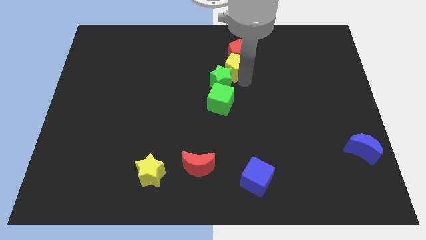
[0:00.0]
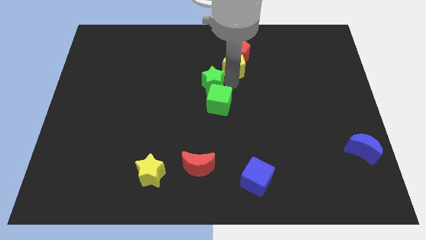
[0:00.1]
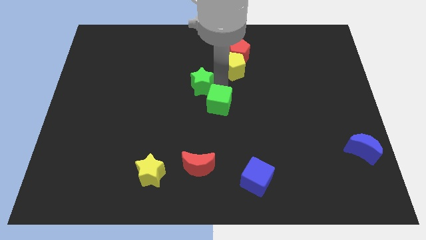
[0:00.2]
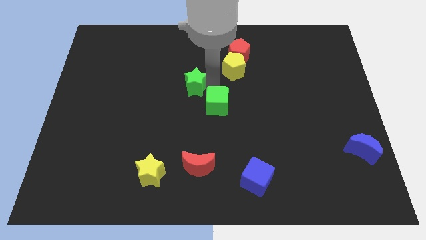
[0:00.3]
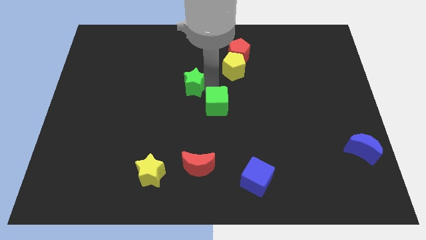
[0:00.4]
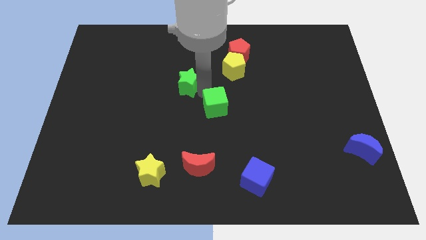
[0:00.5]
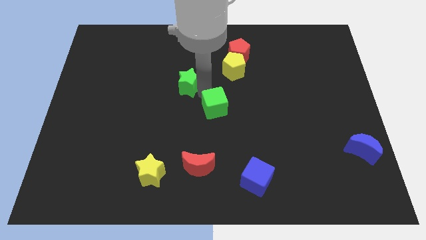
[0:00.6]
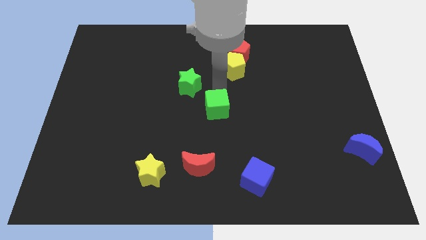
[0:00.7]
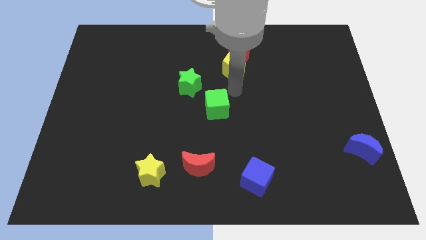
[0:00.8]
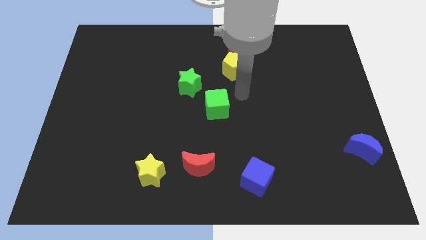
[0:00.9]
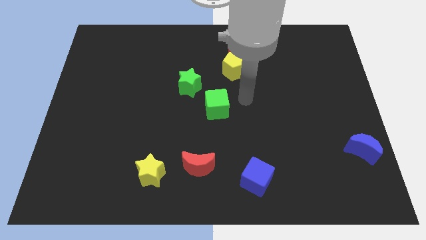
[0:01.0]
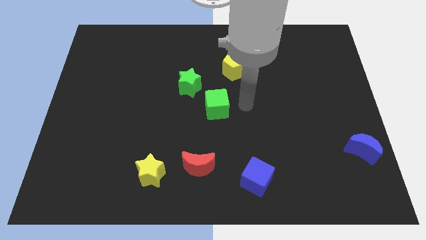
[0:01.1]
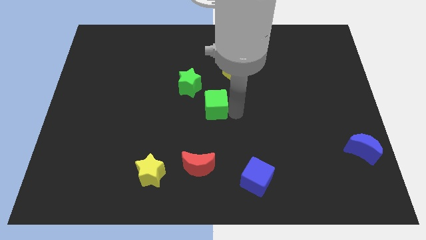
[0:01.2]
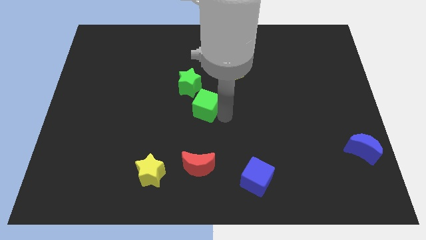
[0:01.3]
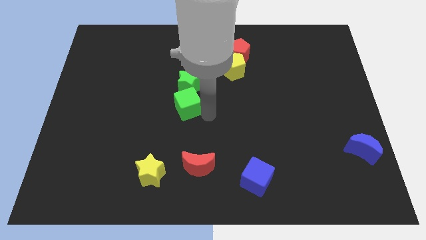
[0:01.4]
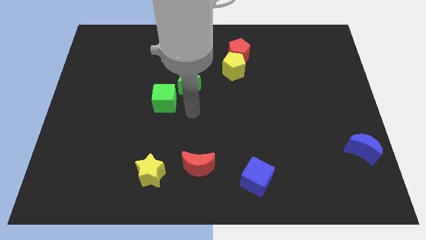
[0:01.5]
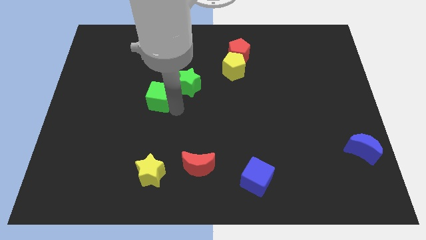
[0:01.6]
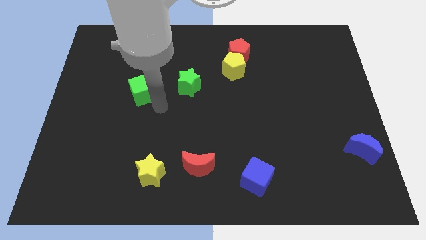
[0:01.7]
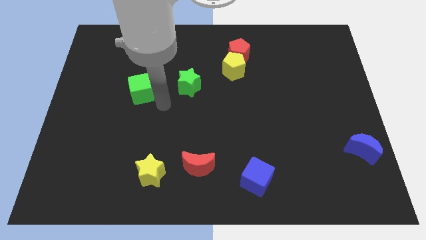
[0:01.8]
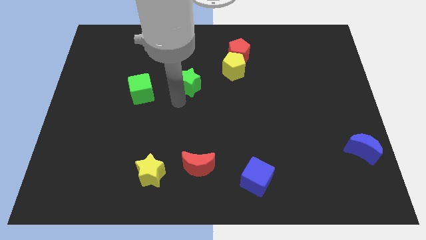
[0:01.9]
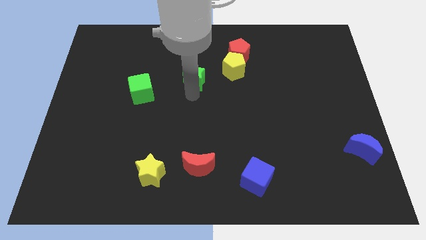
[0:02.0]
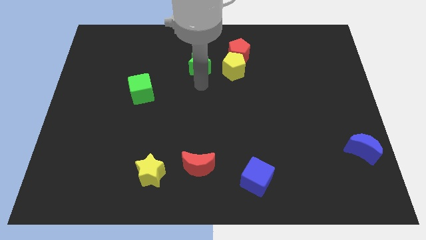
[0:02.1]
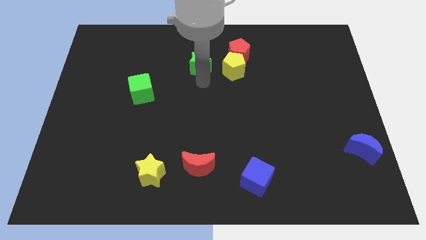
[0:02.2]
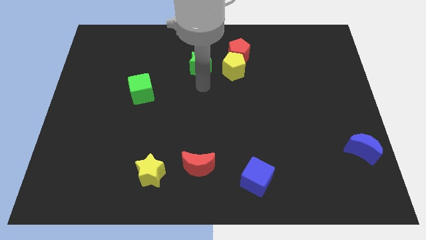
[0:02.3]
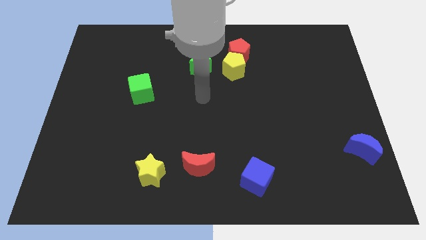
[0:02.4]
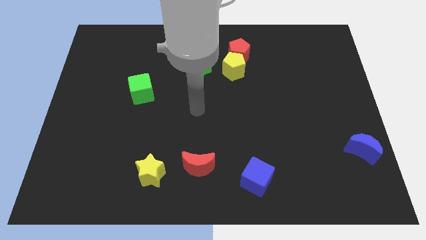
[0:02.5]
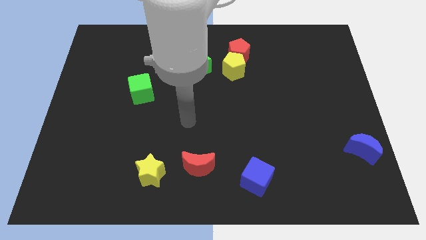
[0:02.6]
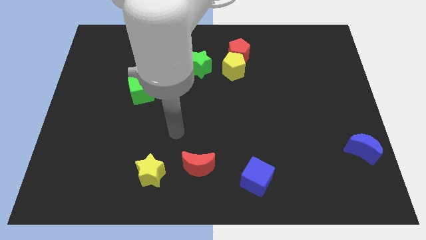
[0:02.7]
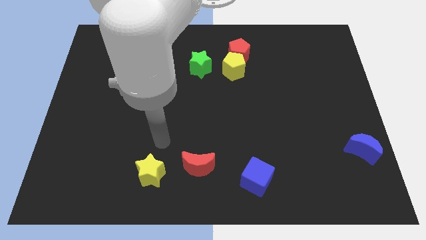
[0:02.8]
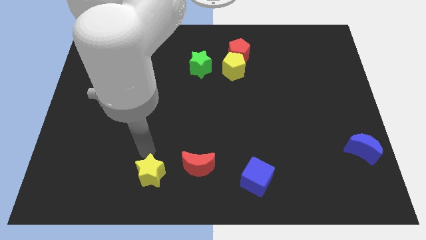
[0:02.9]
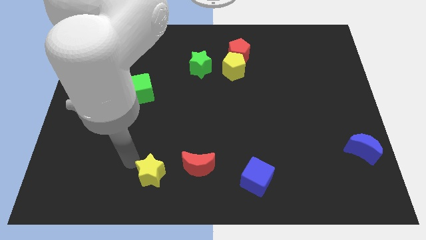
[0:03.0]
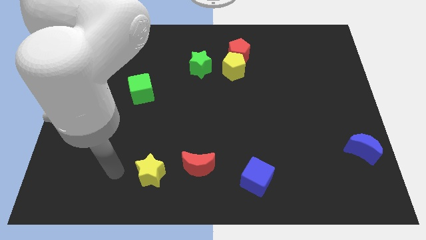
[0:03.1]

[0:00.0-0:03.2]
separate green blocks from red and yellow pentagon

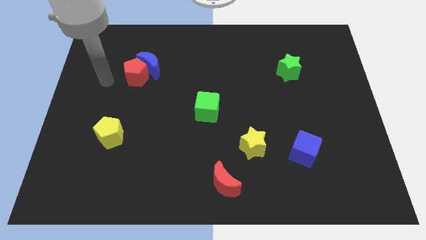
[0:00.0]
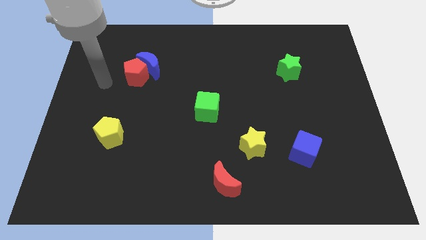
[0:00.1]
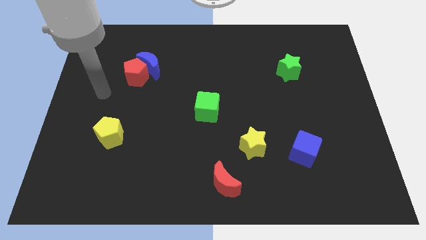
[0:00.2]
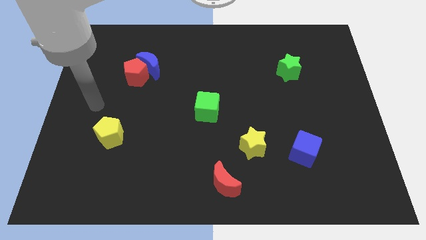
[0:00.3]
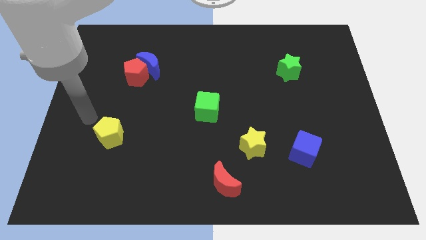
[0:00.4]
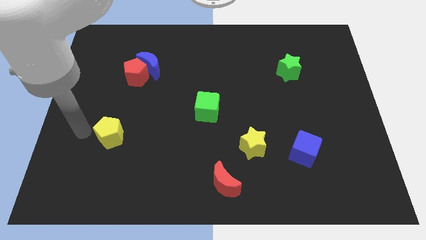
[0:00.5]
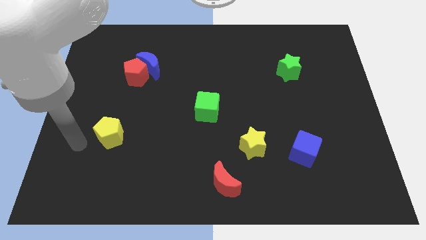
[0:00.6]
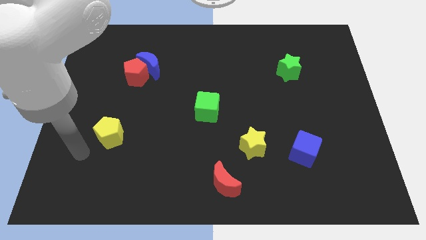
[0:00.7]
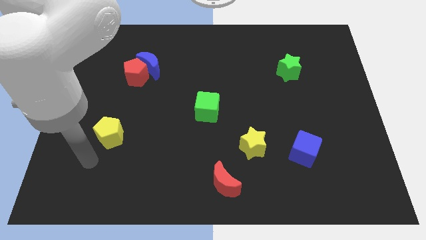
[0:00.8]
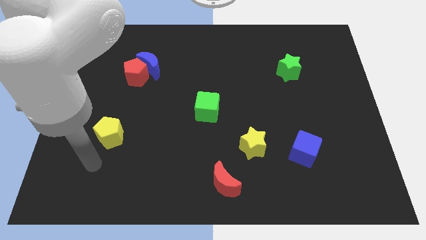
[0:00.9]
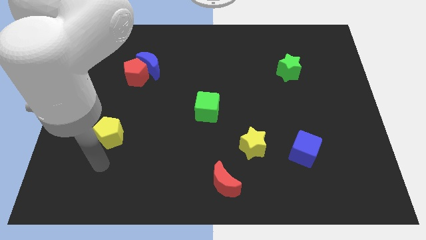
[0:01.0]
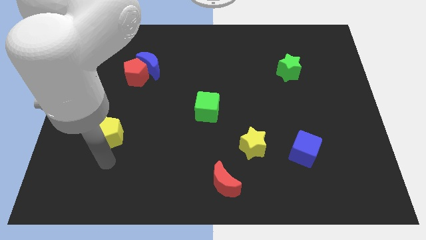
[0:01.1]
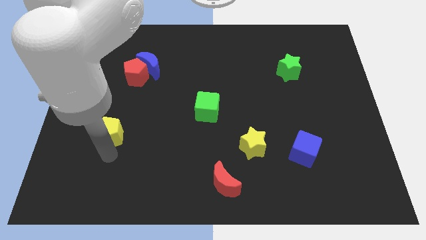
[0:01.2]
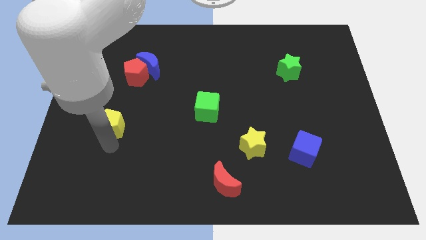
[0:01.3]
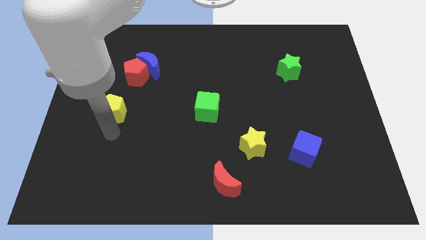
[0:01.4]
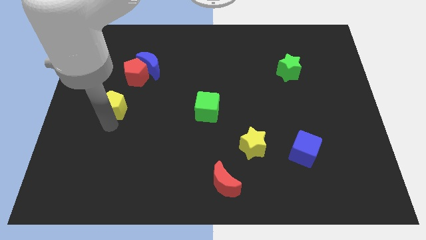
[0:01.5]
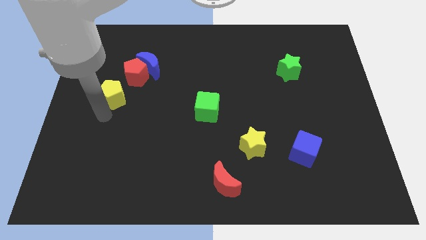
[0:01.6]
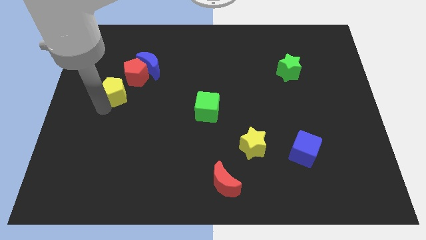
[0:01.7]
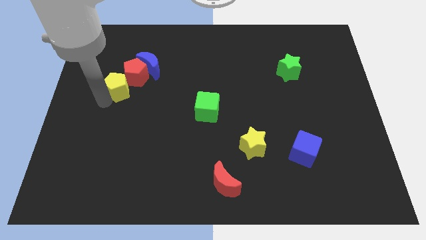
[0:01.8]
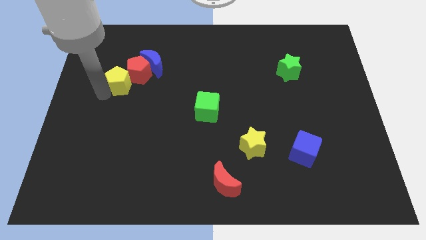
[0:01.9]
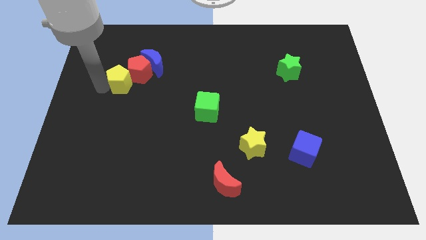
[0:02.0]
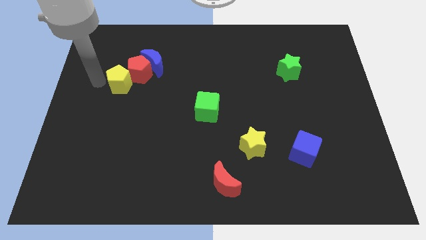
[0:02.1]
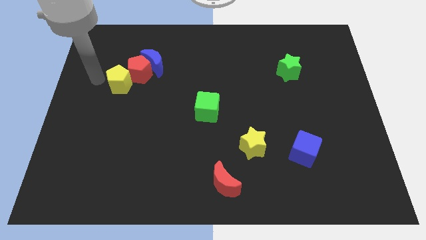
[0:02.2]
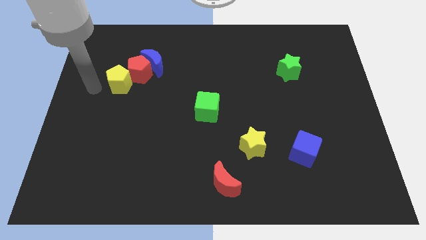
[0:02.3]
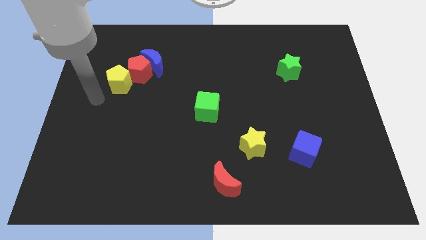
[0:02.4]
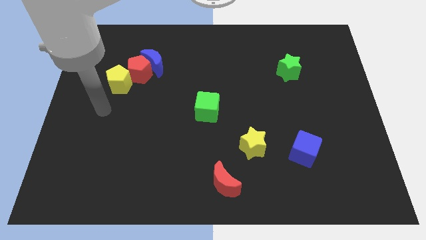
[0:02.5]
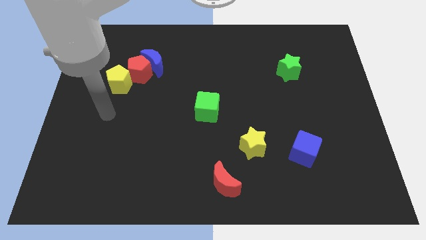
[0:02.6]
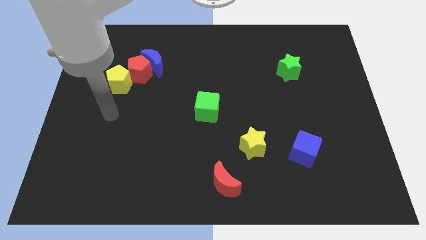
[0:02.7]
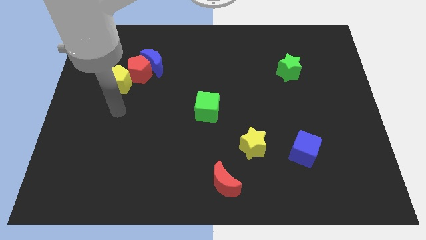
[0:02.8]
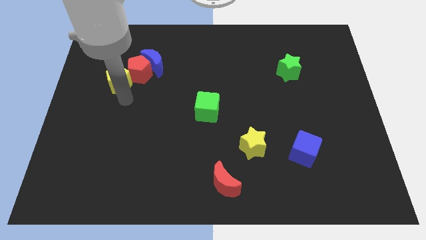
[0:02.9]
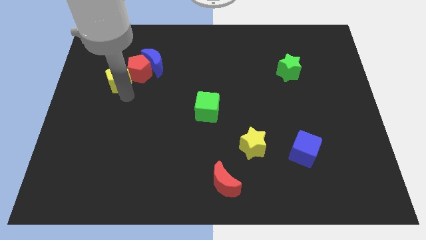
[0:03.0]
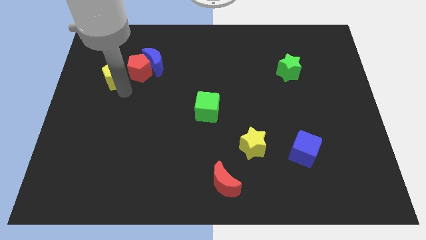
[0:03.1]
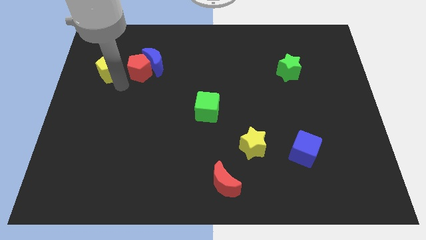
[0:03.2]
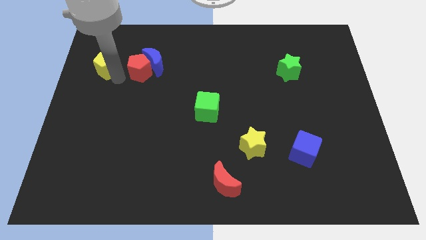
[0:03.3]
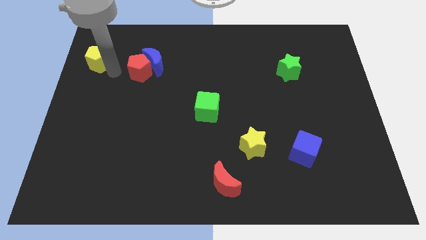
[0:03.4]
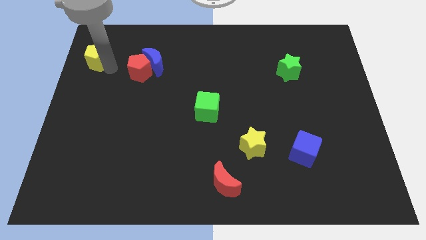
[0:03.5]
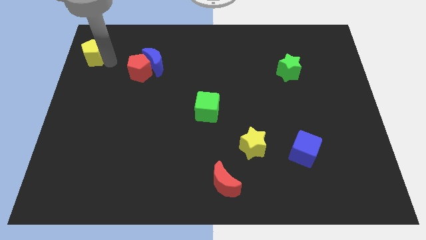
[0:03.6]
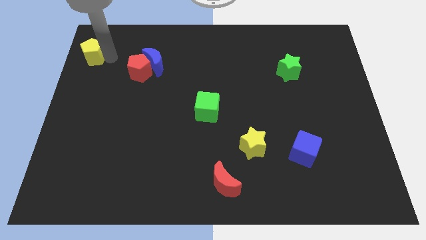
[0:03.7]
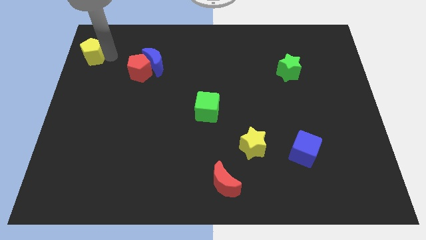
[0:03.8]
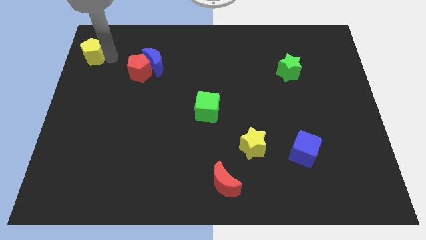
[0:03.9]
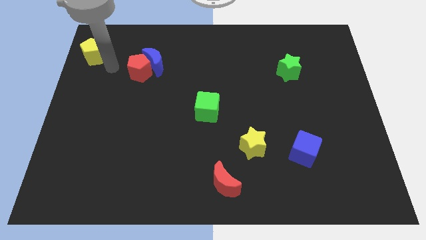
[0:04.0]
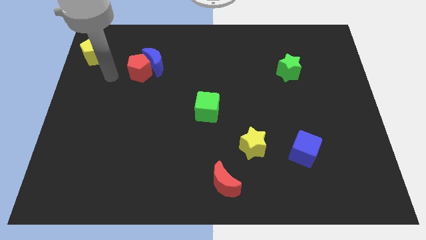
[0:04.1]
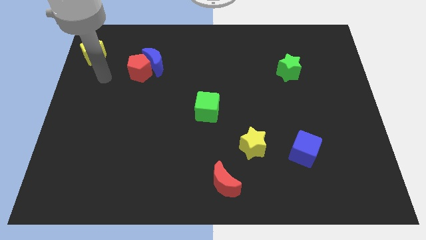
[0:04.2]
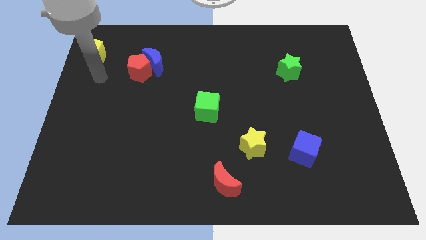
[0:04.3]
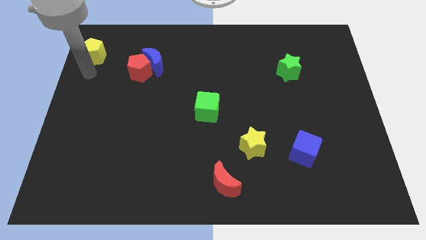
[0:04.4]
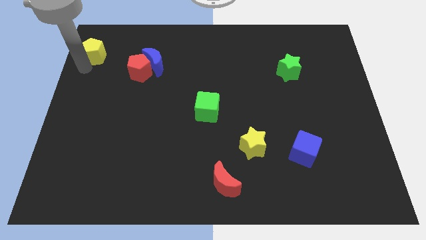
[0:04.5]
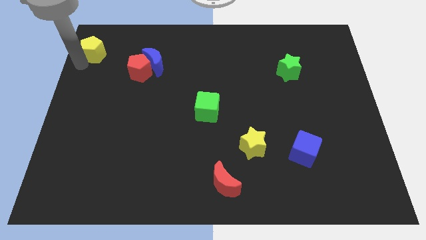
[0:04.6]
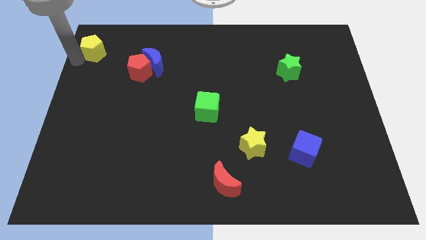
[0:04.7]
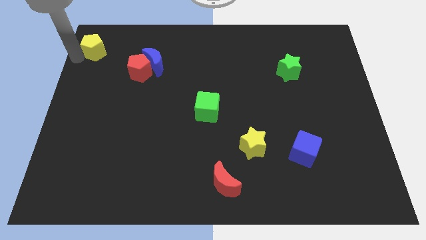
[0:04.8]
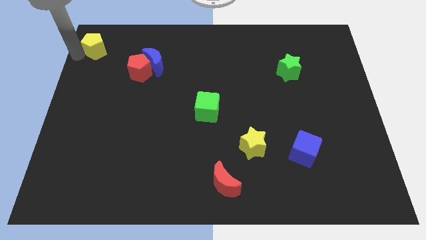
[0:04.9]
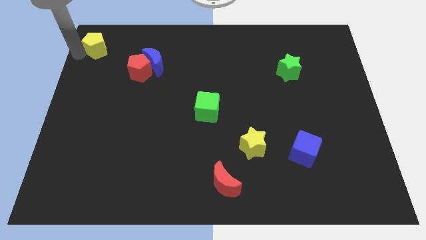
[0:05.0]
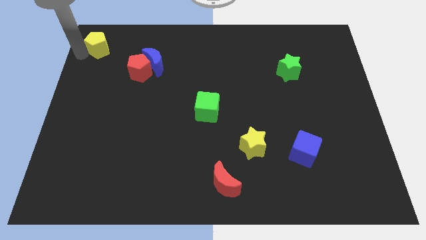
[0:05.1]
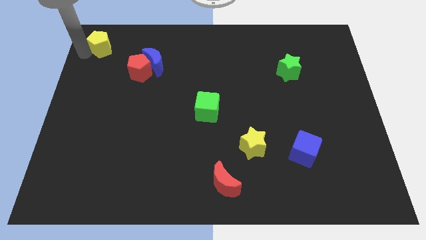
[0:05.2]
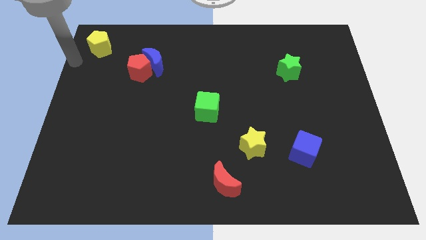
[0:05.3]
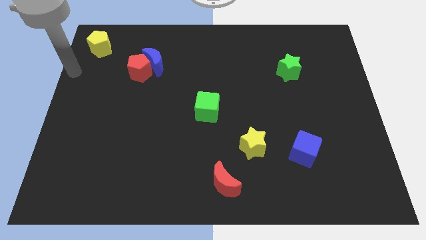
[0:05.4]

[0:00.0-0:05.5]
move yellow pentagon to the top left of the board

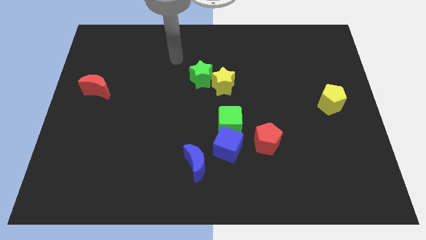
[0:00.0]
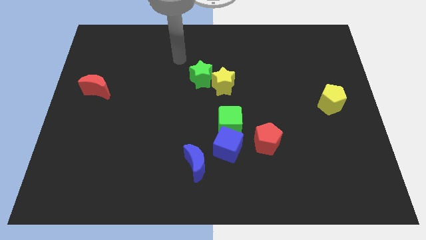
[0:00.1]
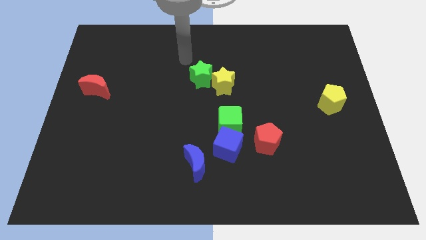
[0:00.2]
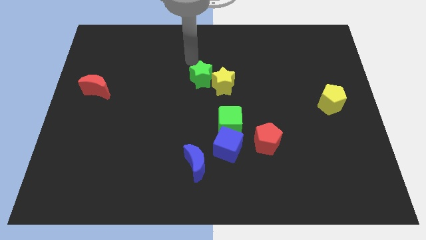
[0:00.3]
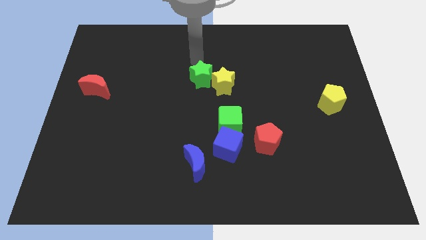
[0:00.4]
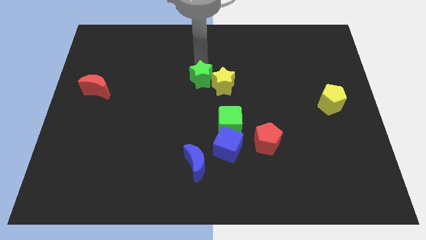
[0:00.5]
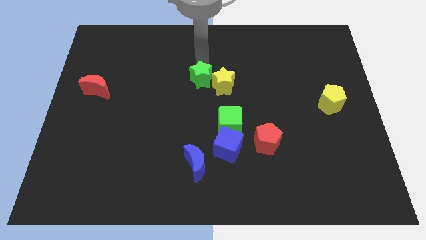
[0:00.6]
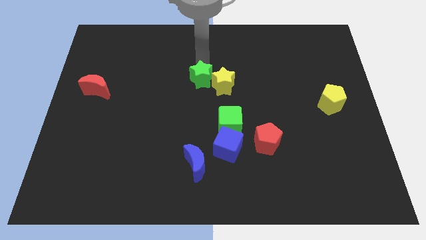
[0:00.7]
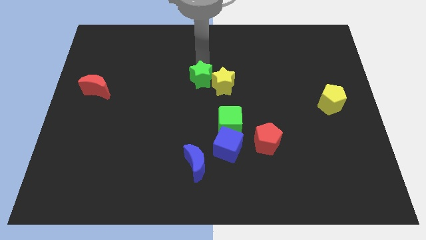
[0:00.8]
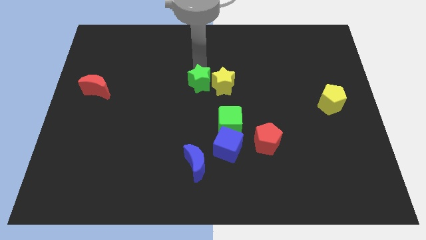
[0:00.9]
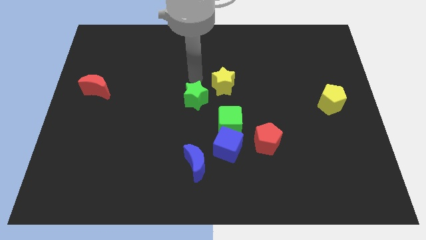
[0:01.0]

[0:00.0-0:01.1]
separate the green star from the yellow star
